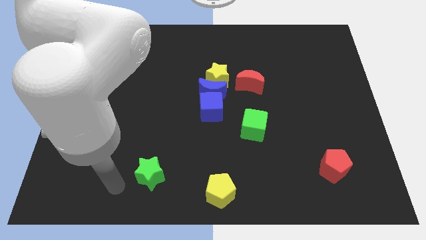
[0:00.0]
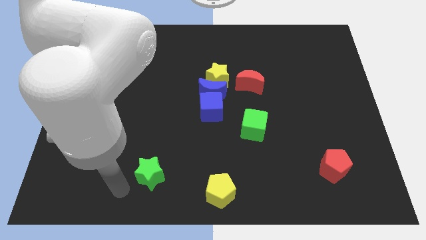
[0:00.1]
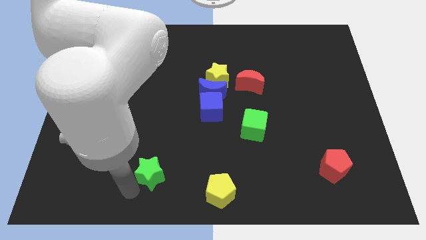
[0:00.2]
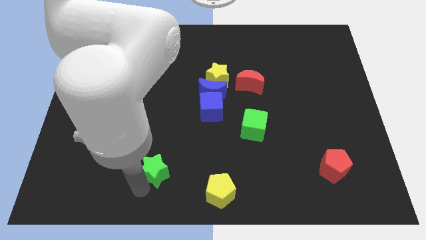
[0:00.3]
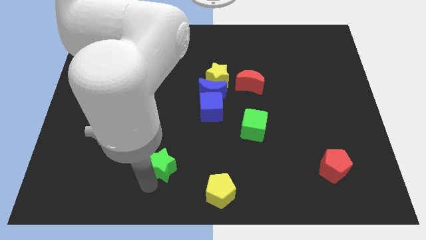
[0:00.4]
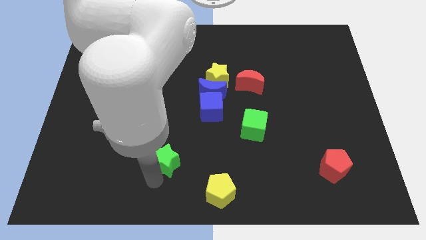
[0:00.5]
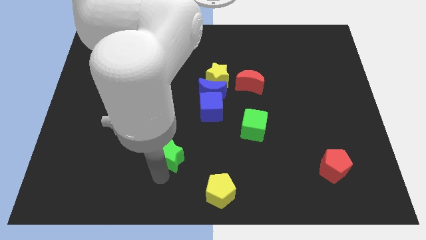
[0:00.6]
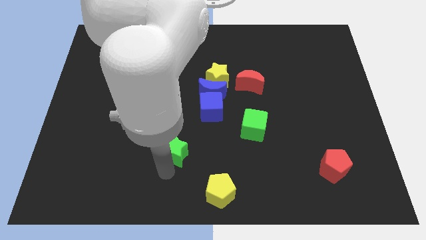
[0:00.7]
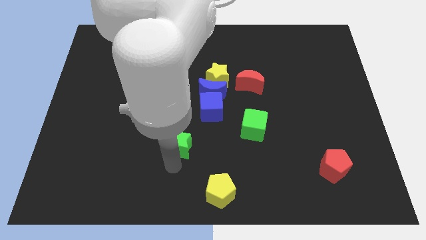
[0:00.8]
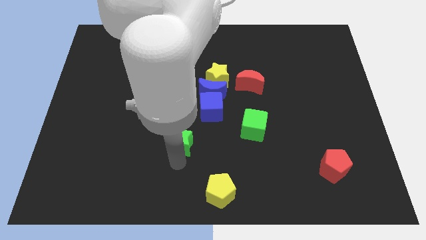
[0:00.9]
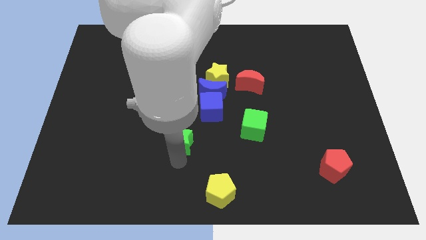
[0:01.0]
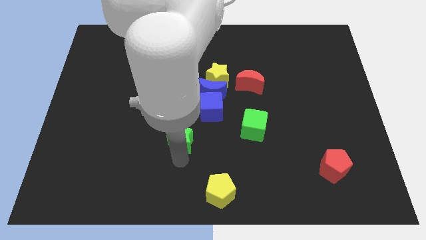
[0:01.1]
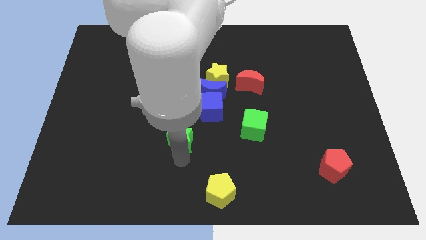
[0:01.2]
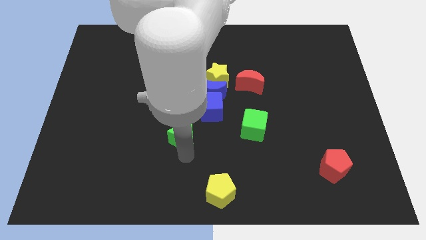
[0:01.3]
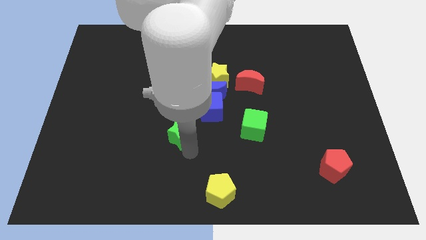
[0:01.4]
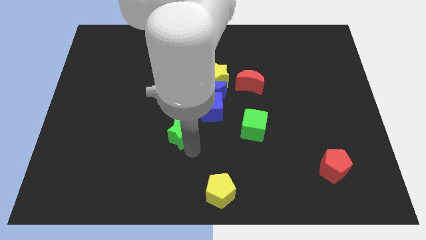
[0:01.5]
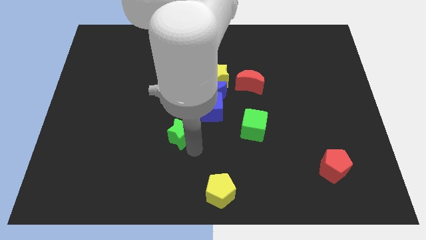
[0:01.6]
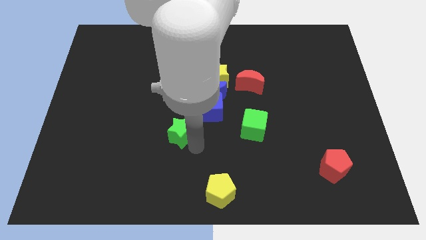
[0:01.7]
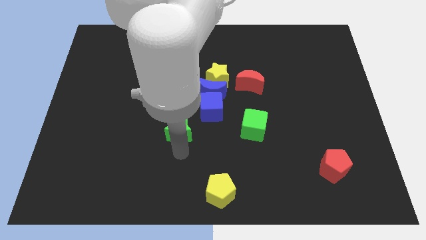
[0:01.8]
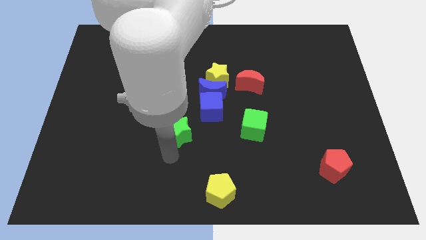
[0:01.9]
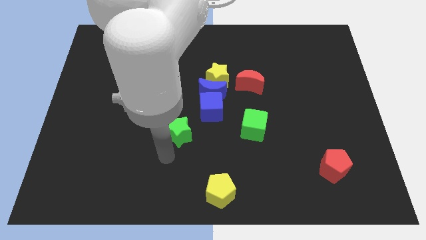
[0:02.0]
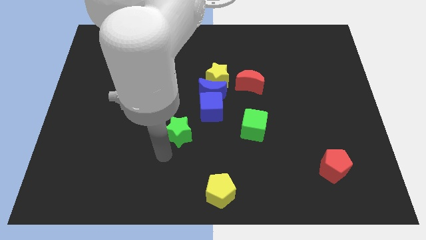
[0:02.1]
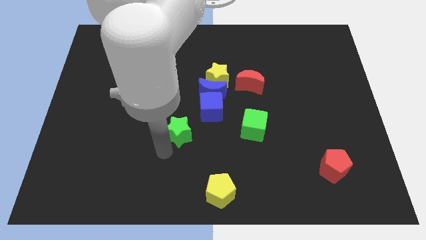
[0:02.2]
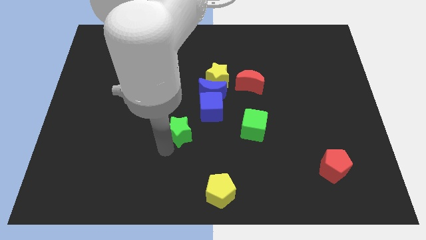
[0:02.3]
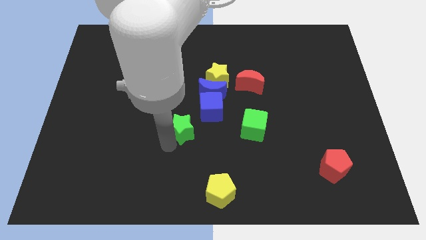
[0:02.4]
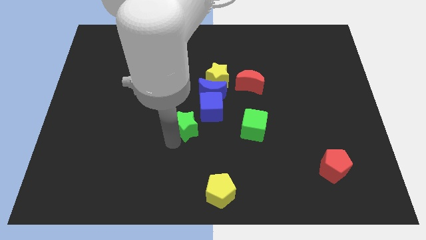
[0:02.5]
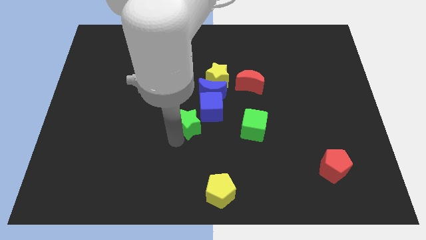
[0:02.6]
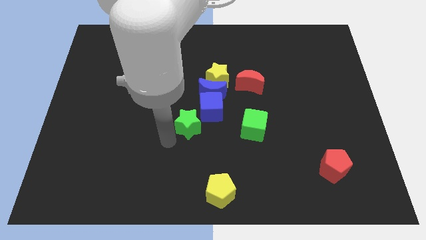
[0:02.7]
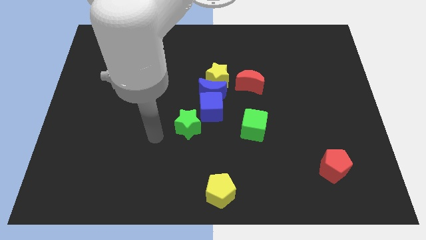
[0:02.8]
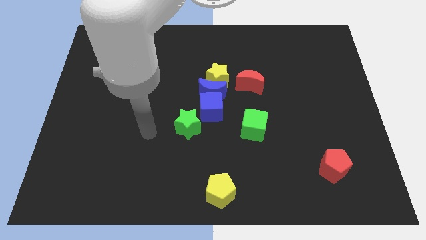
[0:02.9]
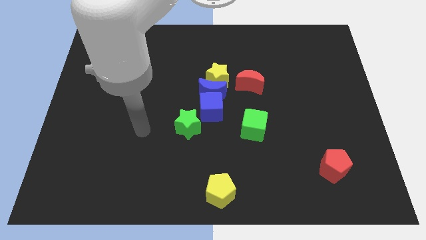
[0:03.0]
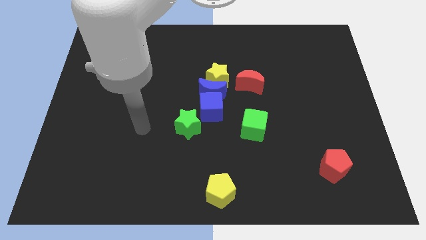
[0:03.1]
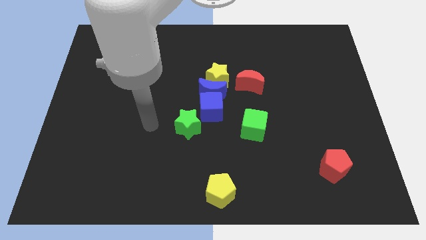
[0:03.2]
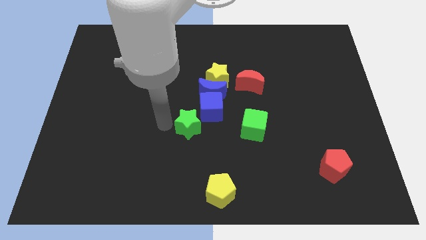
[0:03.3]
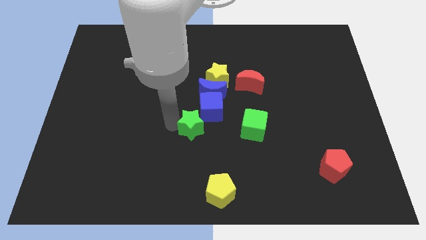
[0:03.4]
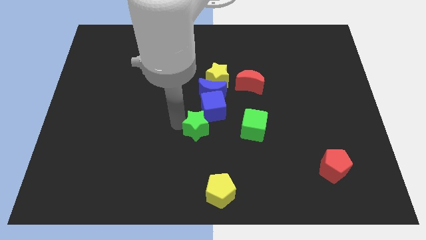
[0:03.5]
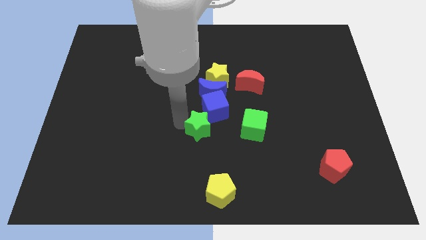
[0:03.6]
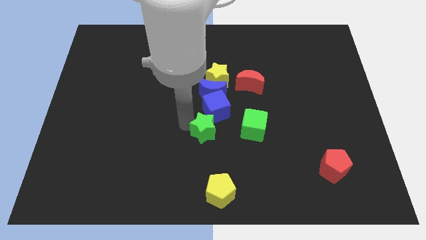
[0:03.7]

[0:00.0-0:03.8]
push the green star into the blue cube

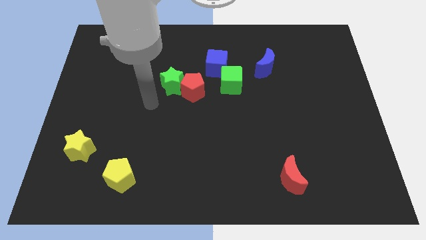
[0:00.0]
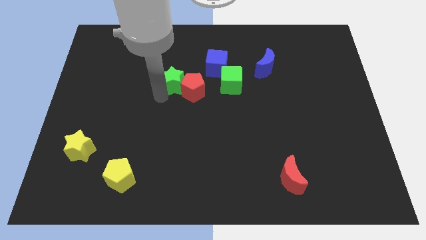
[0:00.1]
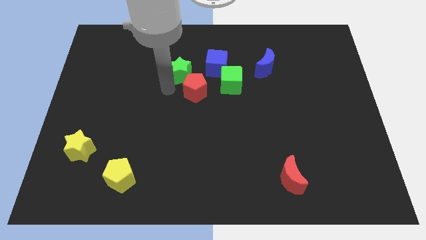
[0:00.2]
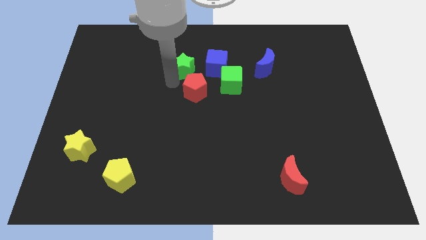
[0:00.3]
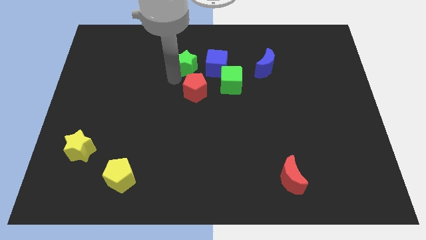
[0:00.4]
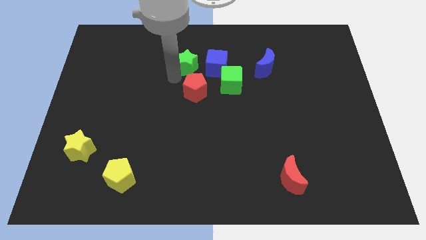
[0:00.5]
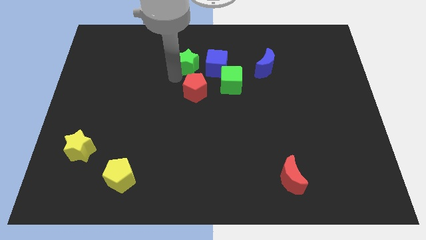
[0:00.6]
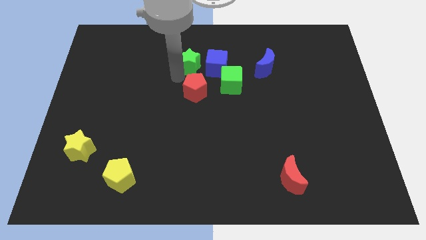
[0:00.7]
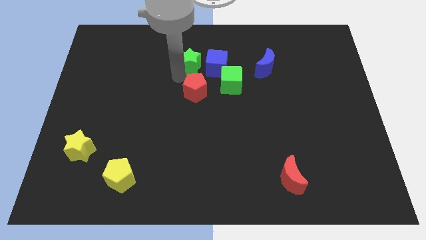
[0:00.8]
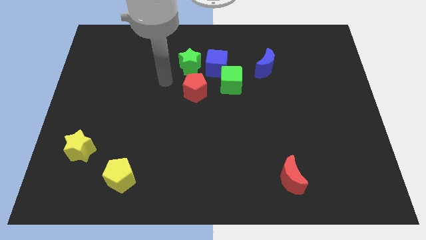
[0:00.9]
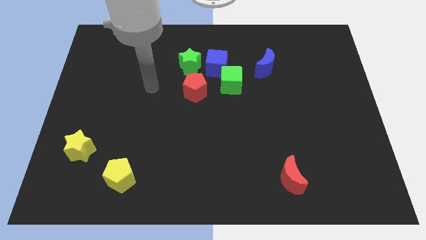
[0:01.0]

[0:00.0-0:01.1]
put the star on the left side of blue cube

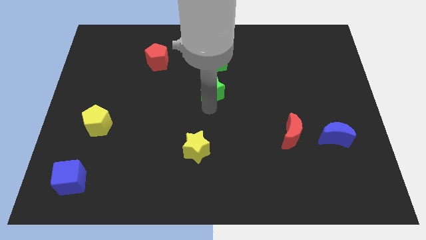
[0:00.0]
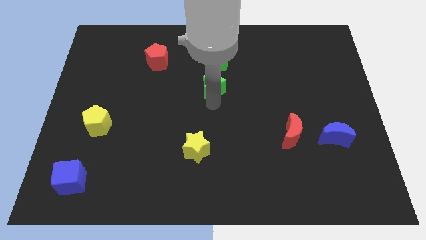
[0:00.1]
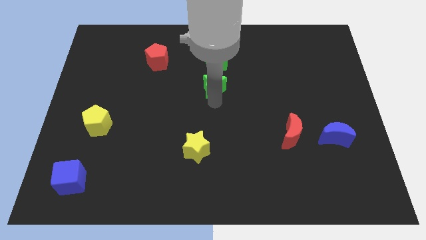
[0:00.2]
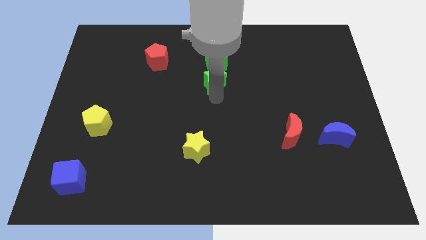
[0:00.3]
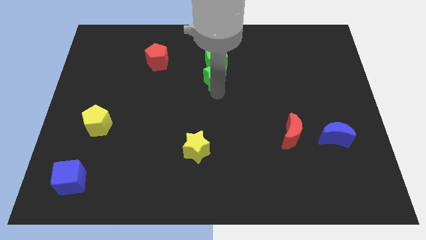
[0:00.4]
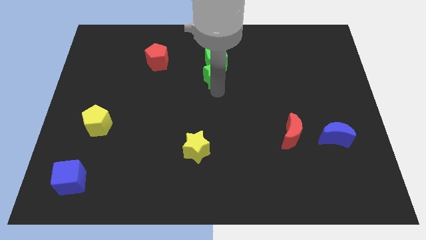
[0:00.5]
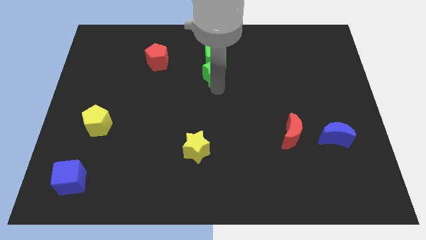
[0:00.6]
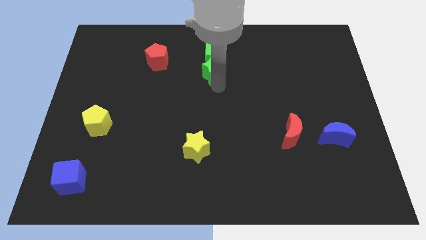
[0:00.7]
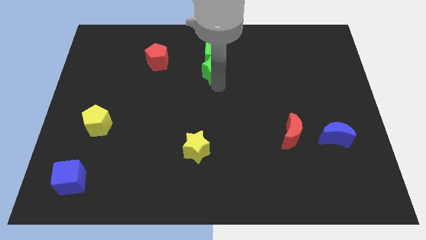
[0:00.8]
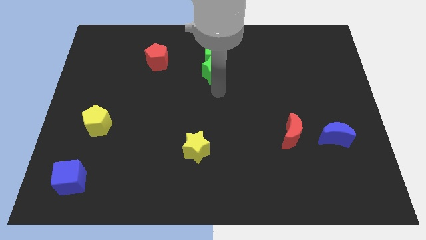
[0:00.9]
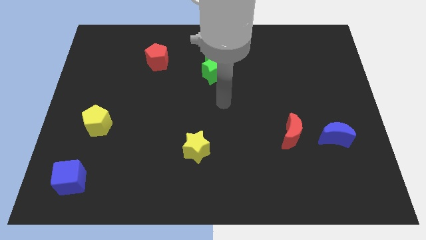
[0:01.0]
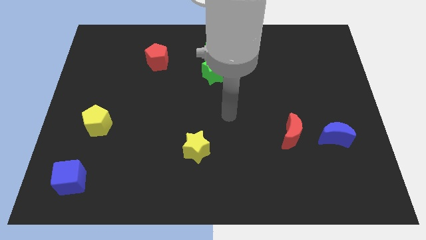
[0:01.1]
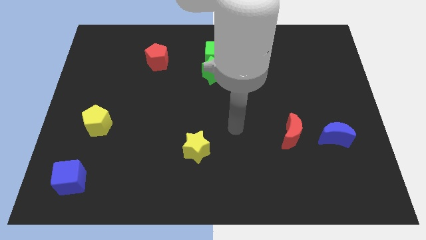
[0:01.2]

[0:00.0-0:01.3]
push the green star into the green cube

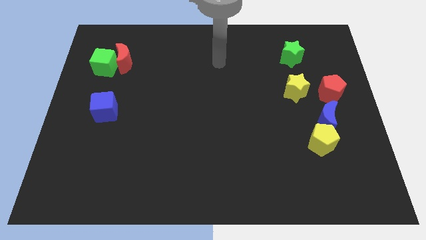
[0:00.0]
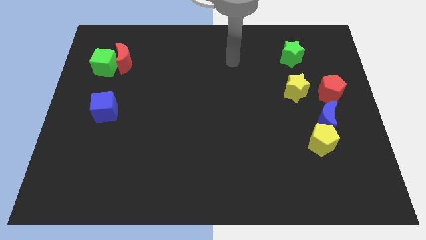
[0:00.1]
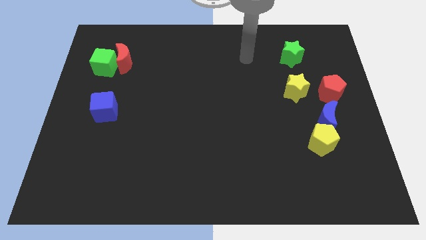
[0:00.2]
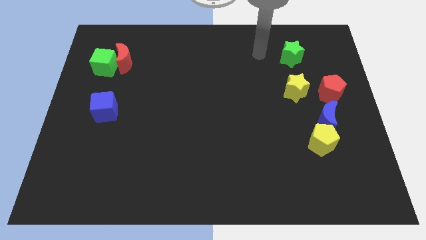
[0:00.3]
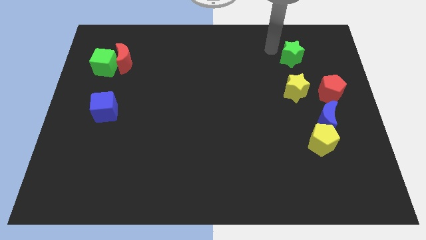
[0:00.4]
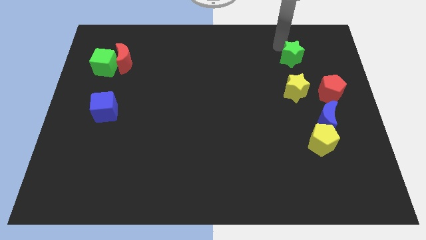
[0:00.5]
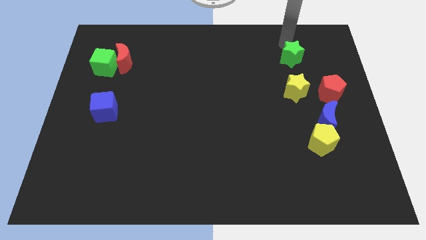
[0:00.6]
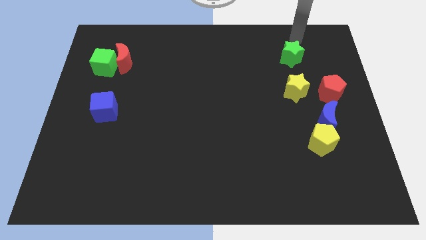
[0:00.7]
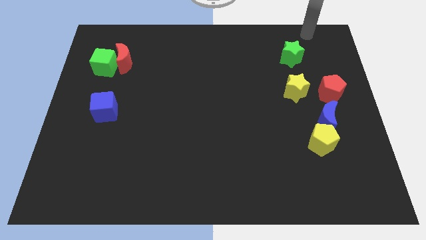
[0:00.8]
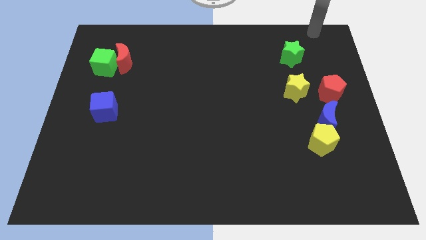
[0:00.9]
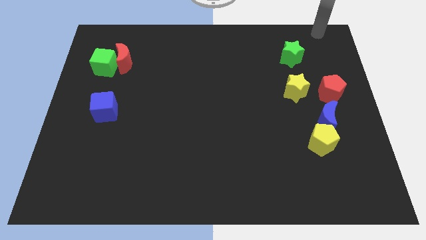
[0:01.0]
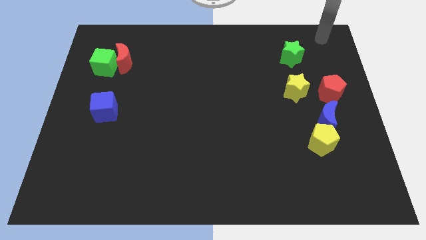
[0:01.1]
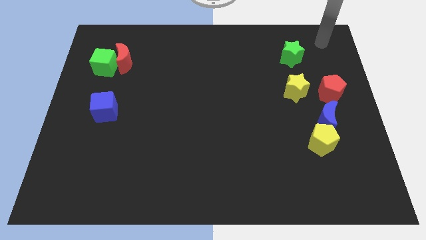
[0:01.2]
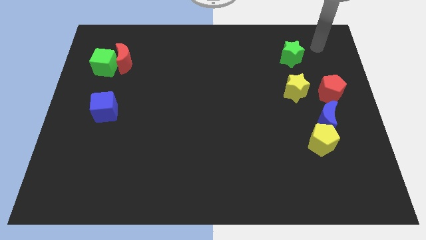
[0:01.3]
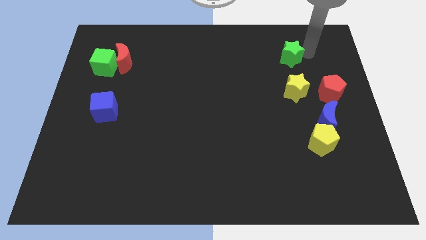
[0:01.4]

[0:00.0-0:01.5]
move your arm towards green star

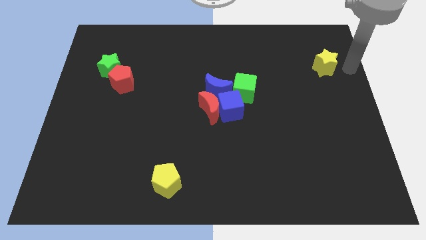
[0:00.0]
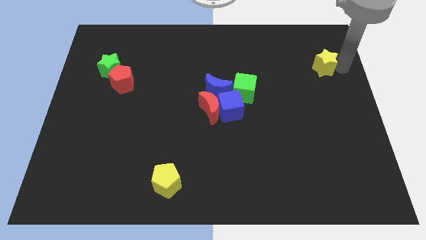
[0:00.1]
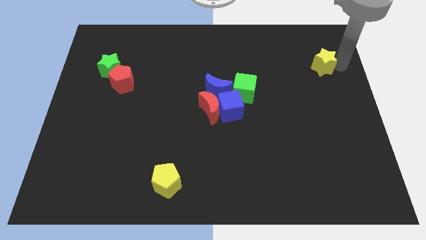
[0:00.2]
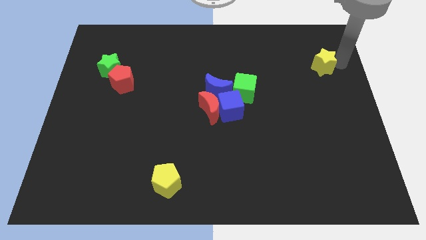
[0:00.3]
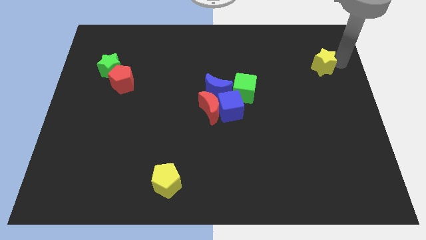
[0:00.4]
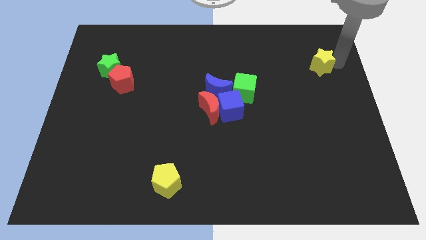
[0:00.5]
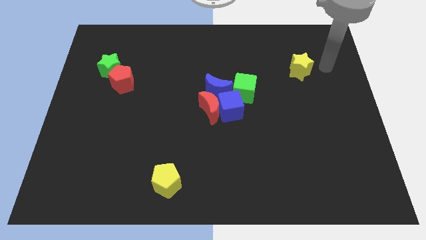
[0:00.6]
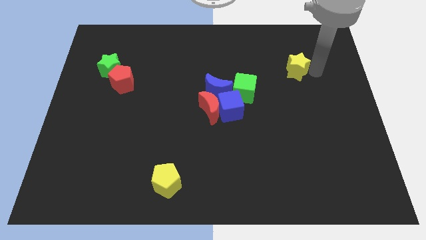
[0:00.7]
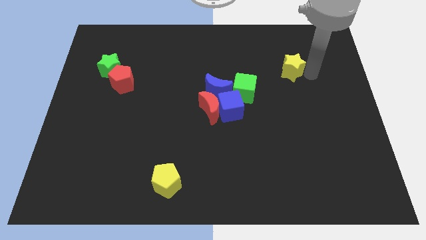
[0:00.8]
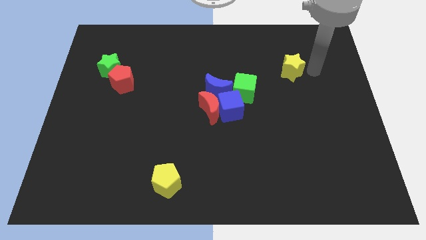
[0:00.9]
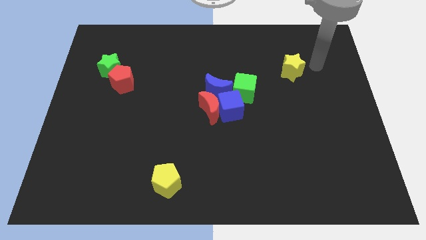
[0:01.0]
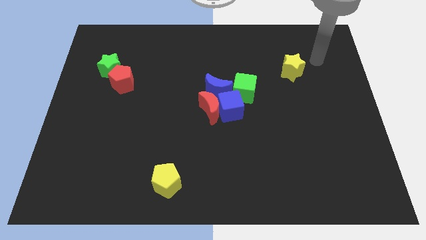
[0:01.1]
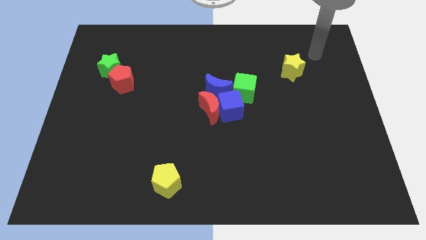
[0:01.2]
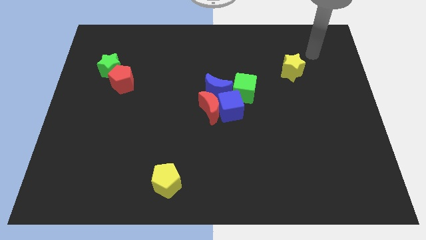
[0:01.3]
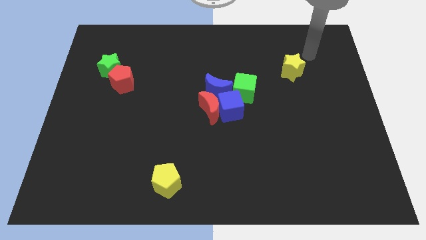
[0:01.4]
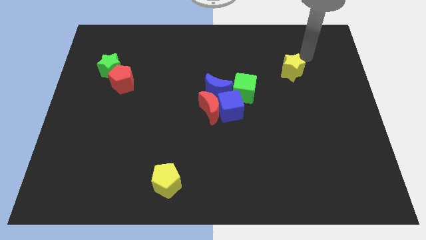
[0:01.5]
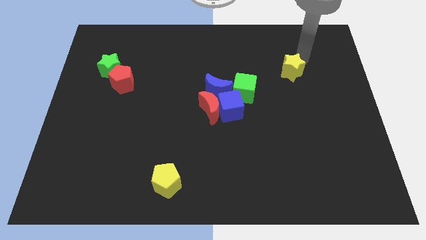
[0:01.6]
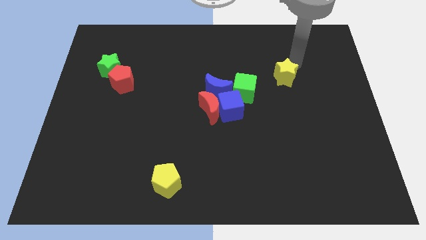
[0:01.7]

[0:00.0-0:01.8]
move the yellow star into group of elements
